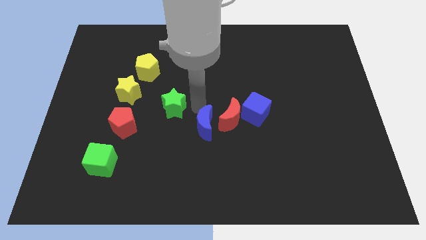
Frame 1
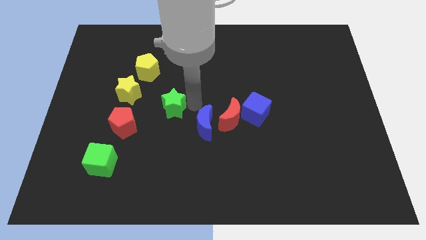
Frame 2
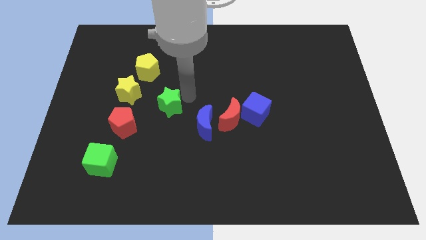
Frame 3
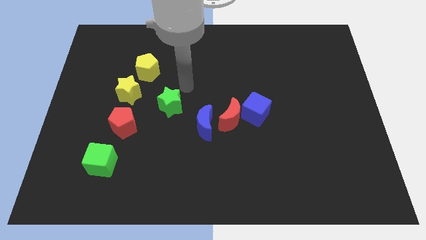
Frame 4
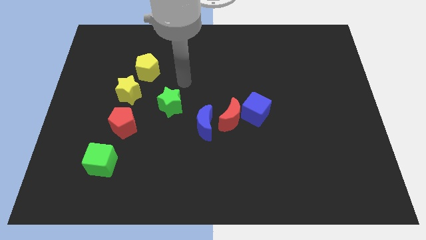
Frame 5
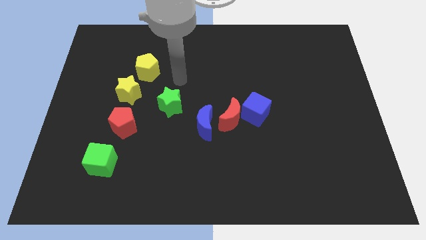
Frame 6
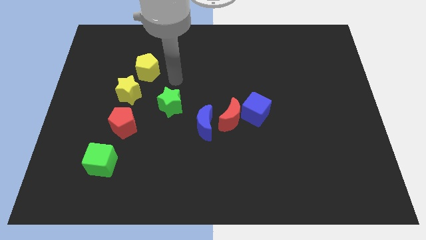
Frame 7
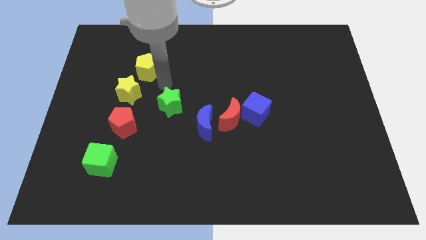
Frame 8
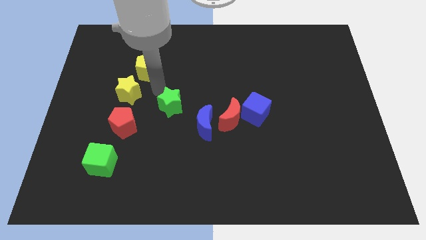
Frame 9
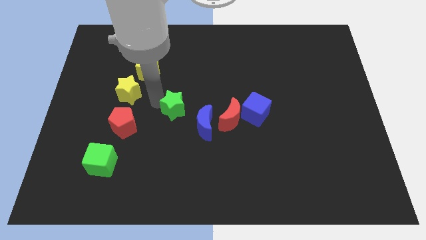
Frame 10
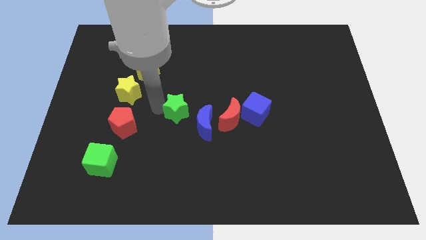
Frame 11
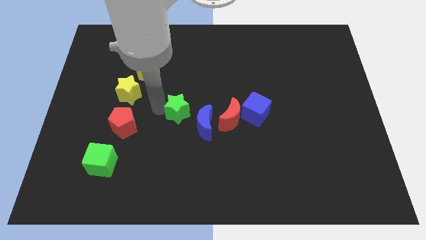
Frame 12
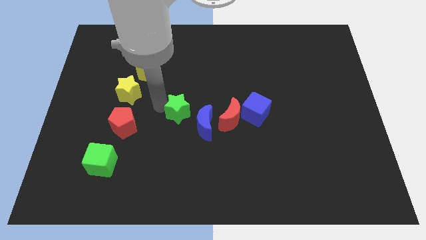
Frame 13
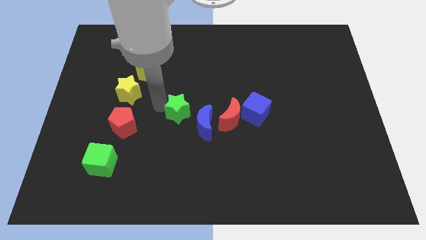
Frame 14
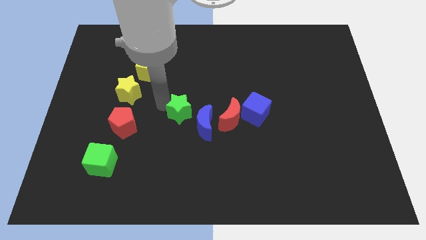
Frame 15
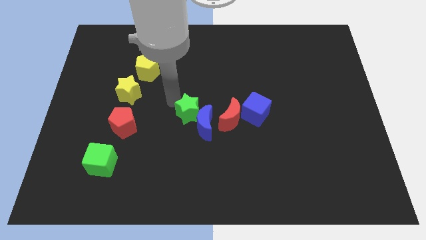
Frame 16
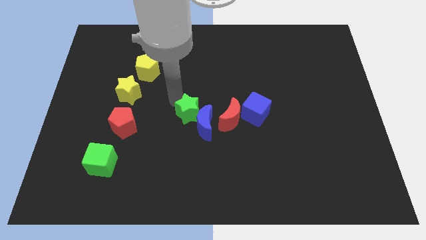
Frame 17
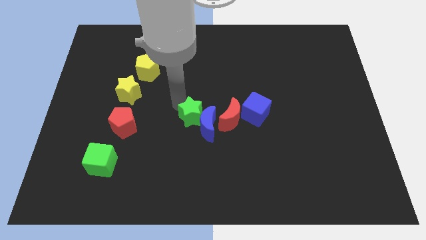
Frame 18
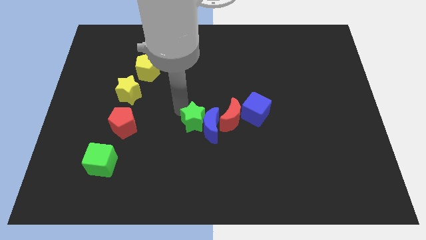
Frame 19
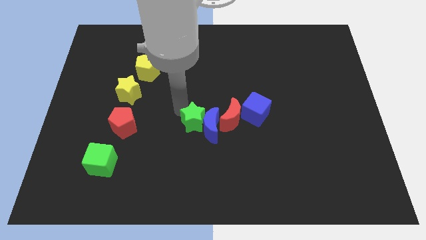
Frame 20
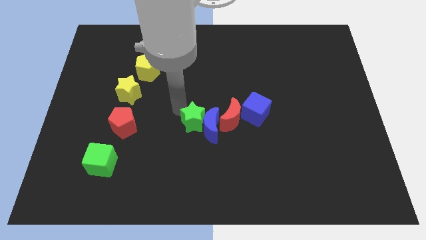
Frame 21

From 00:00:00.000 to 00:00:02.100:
push the green star into the blue crescent at the center

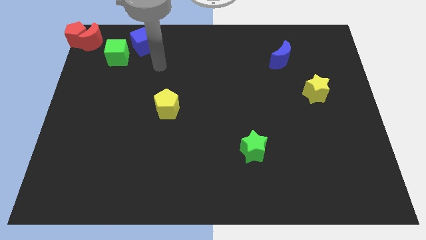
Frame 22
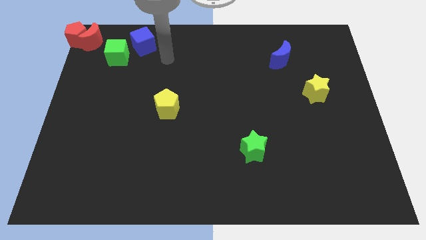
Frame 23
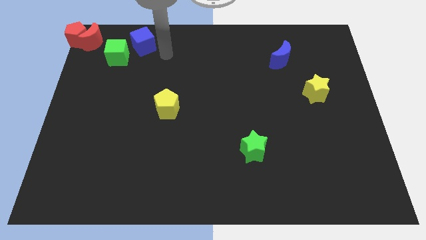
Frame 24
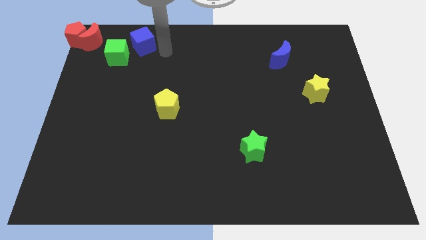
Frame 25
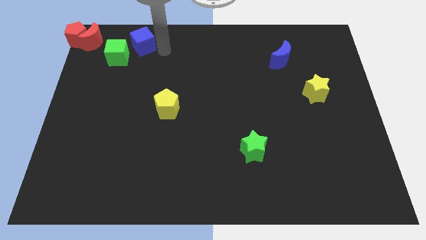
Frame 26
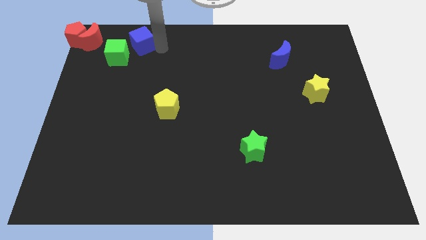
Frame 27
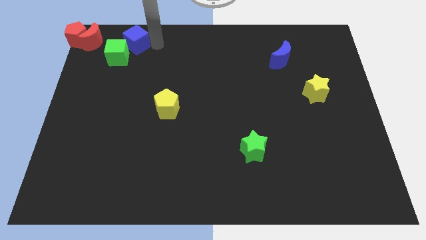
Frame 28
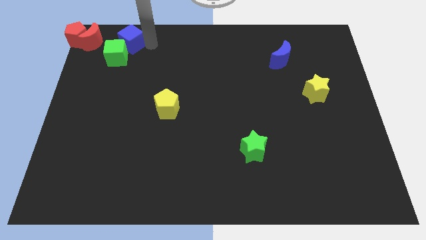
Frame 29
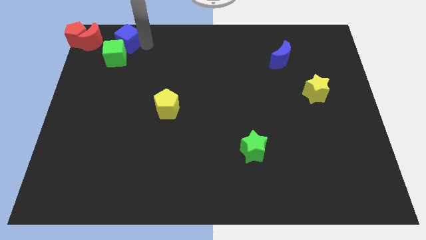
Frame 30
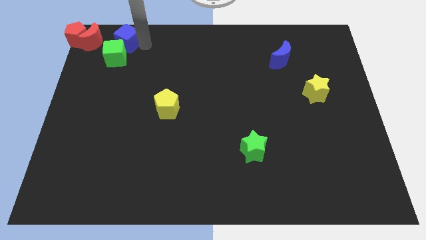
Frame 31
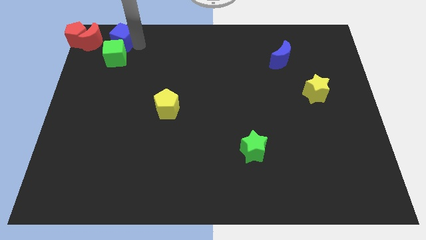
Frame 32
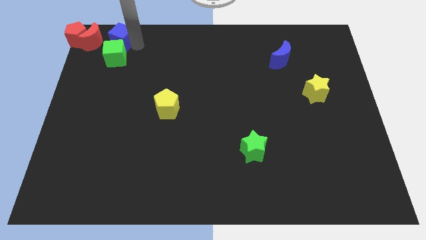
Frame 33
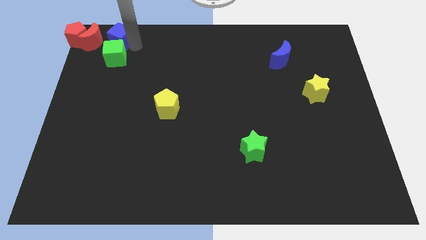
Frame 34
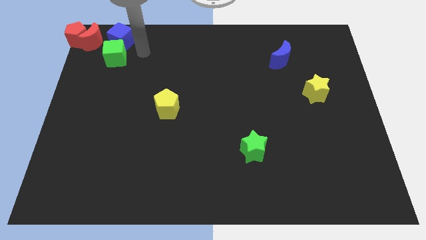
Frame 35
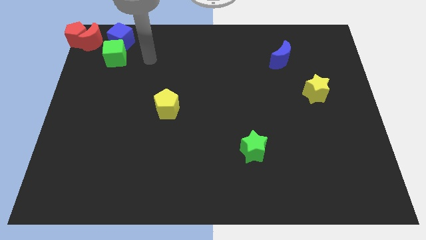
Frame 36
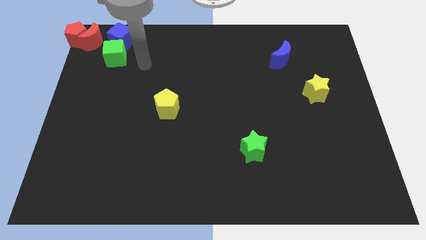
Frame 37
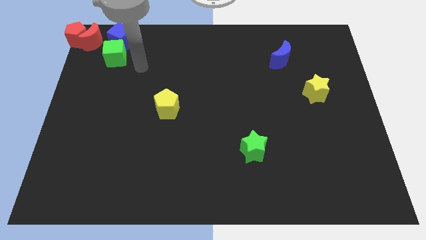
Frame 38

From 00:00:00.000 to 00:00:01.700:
put the blue cube vertically above the green cube

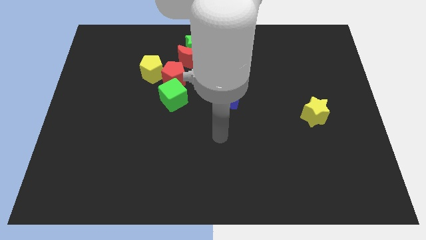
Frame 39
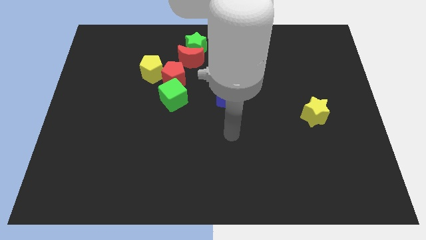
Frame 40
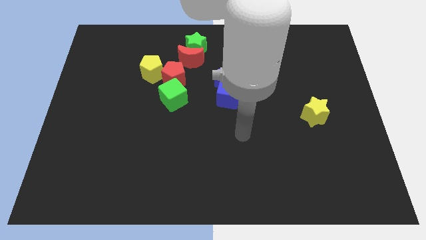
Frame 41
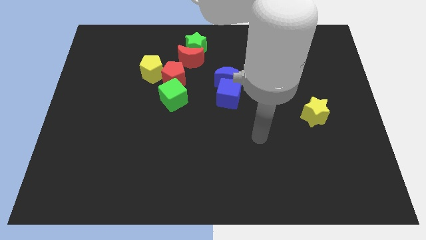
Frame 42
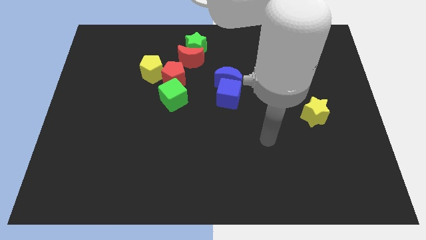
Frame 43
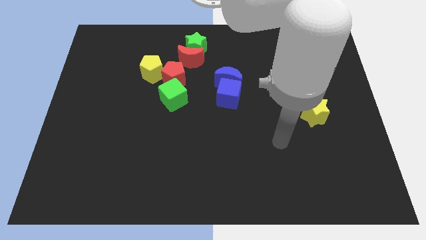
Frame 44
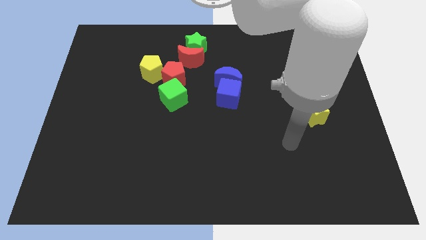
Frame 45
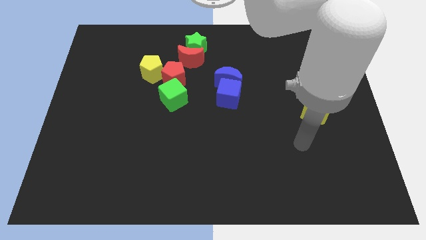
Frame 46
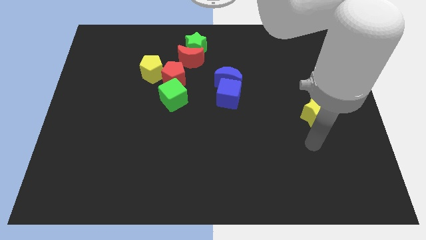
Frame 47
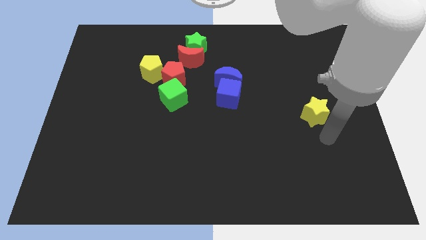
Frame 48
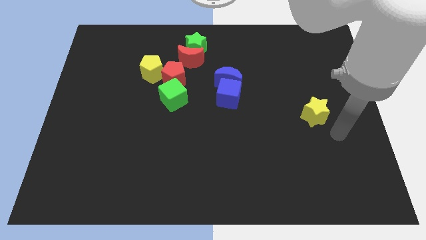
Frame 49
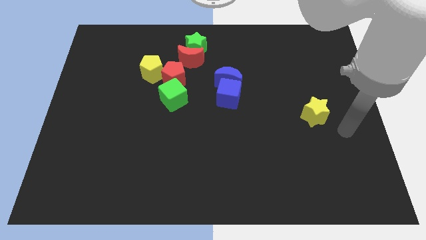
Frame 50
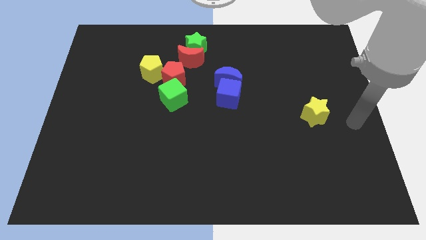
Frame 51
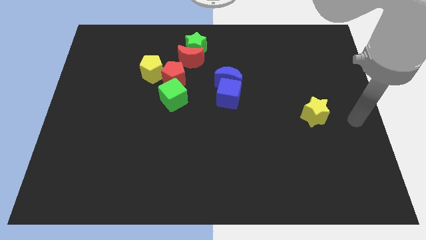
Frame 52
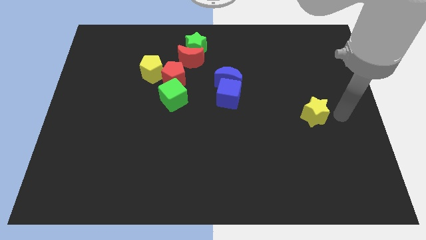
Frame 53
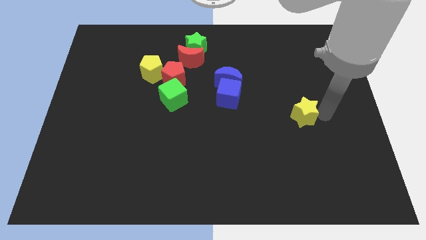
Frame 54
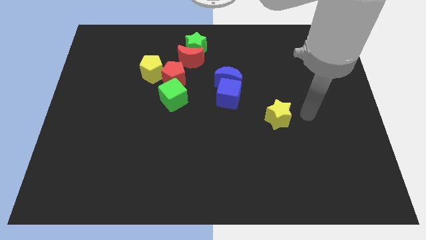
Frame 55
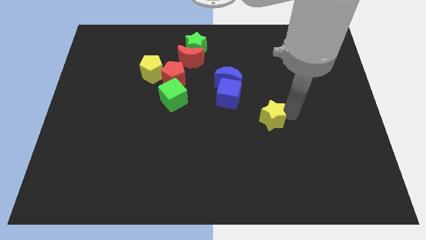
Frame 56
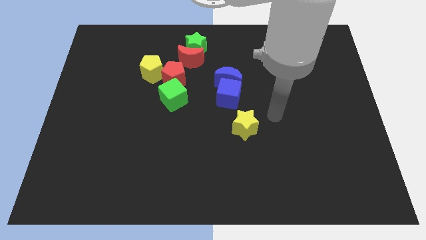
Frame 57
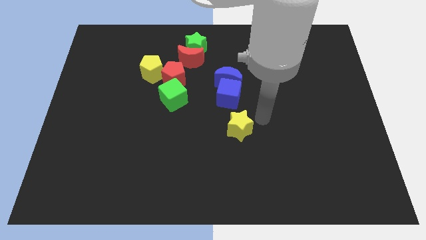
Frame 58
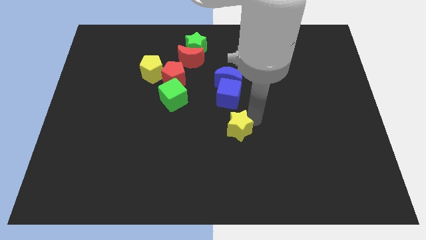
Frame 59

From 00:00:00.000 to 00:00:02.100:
move the yellow star to the bottom right side of the blue cube

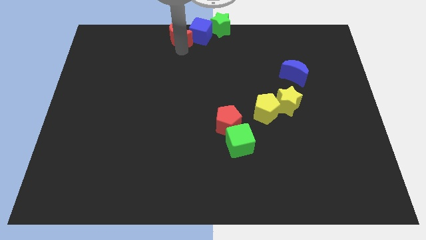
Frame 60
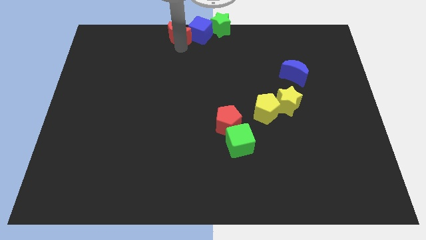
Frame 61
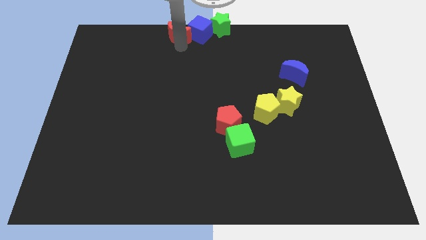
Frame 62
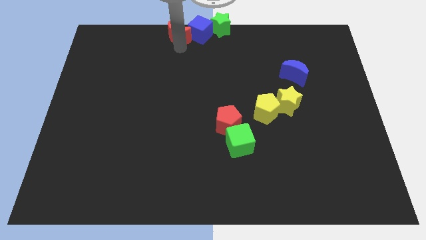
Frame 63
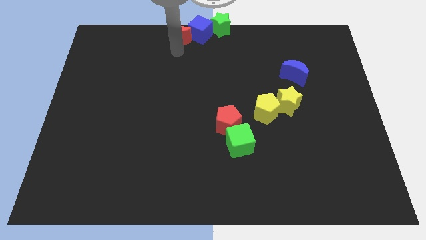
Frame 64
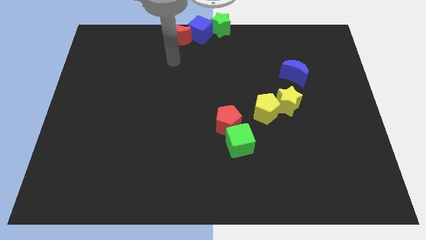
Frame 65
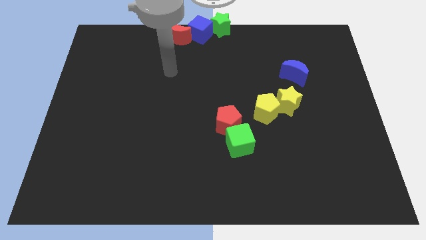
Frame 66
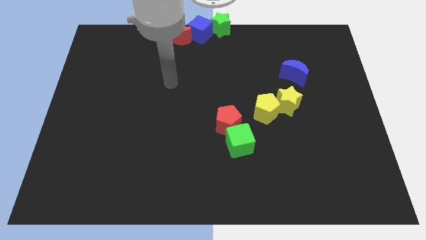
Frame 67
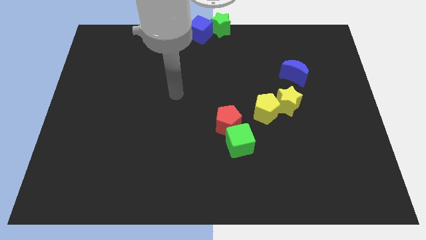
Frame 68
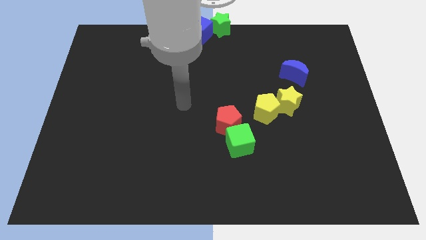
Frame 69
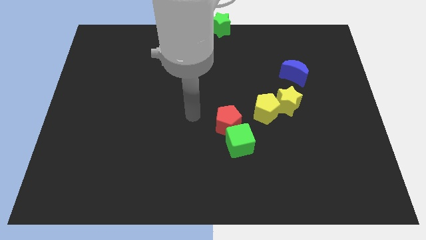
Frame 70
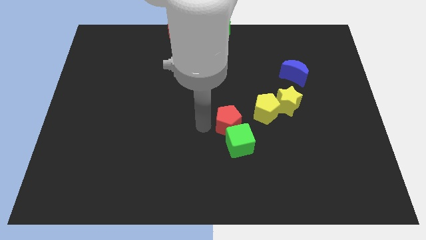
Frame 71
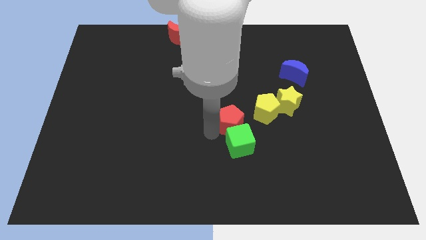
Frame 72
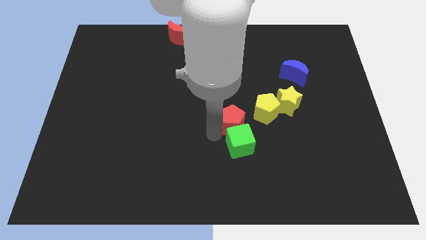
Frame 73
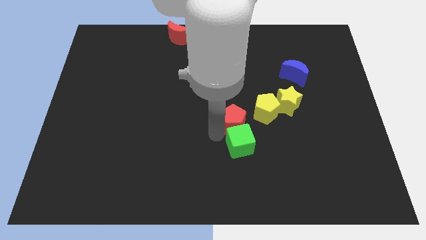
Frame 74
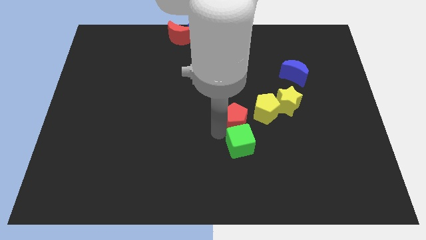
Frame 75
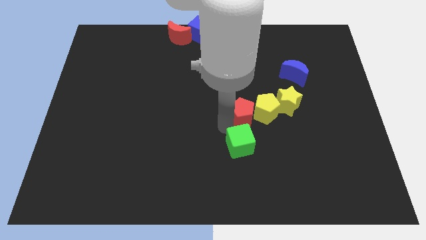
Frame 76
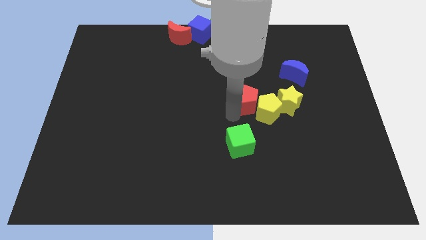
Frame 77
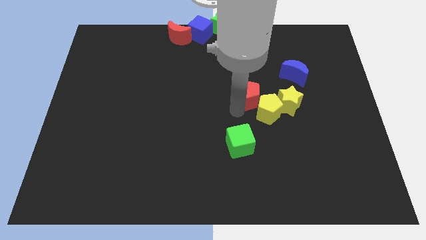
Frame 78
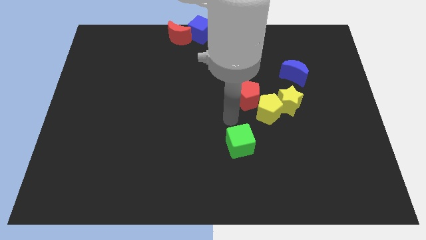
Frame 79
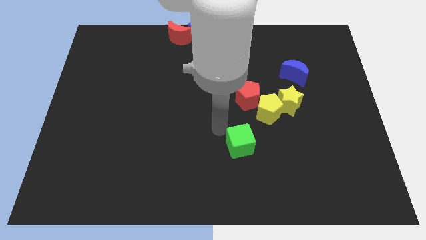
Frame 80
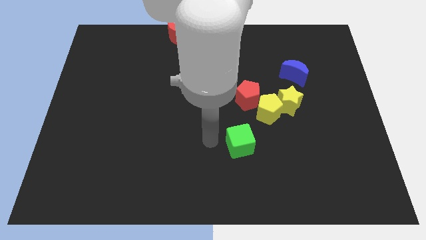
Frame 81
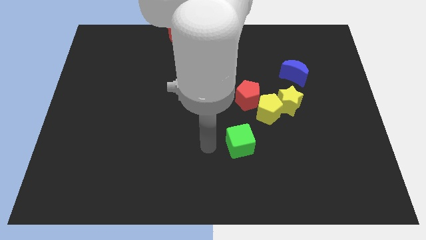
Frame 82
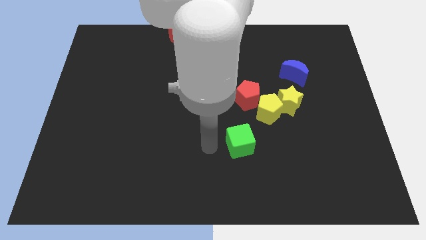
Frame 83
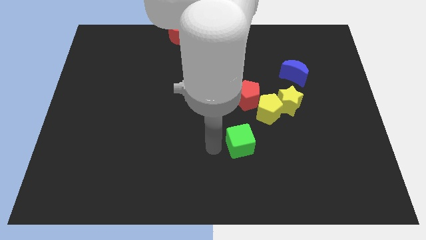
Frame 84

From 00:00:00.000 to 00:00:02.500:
move red pentagon to the left top of yellow pentagon

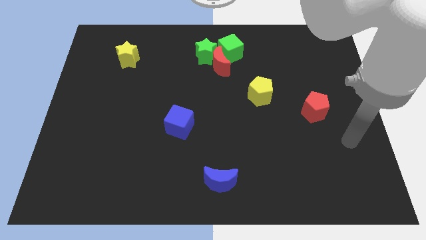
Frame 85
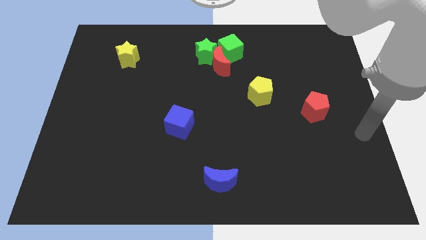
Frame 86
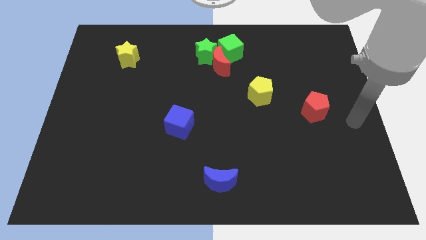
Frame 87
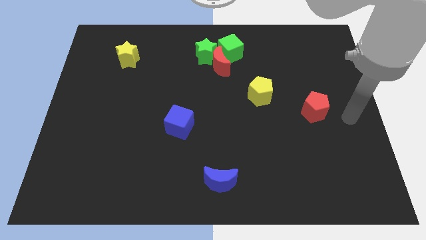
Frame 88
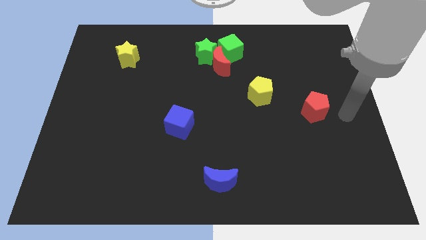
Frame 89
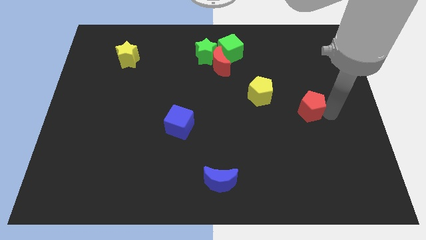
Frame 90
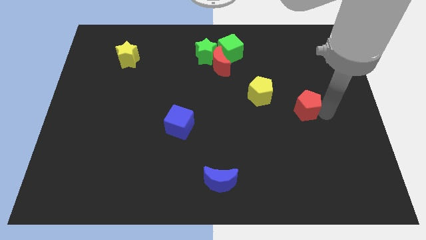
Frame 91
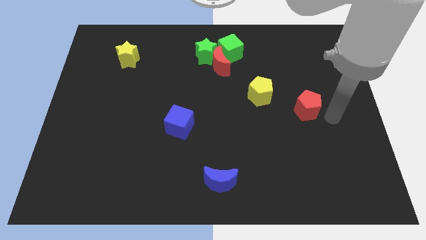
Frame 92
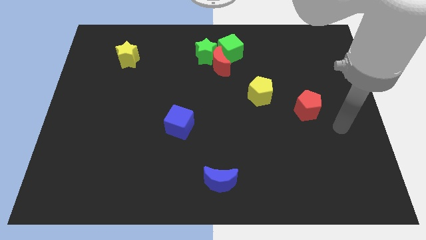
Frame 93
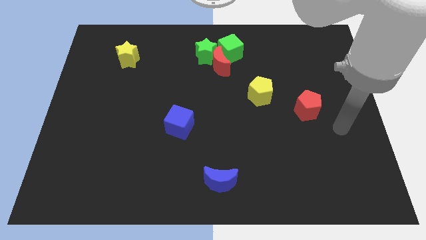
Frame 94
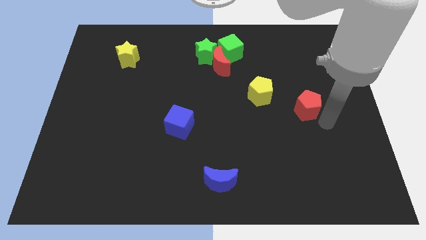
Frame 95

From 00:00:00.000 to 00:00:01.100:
move red pentagon slightly to wards the yellow pentagon
